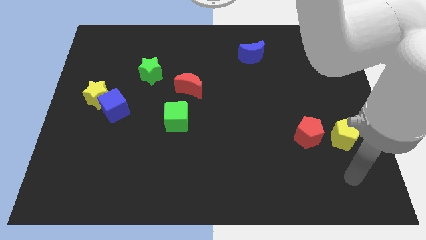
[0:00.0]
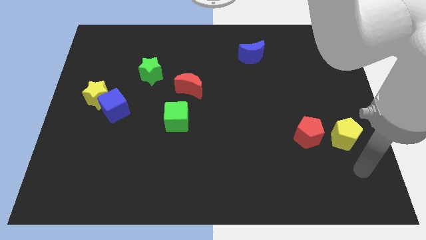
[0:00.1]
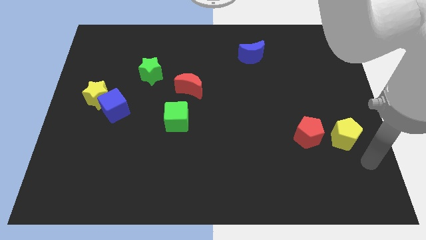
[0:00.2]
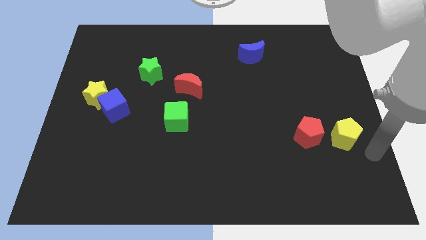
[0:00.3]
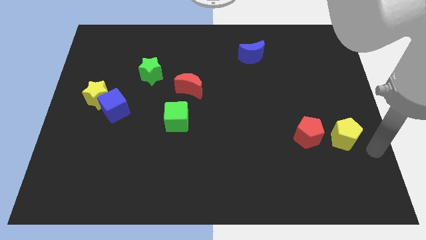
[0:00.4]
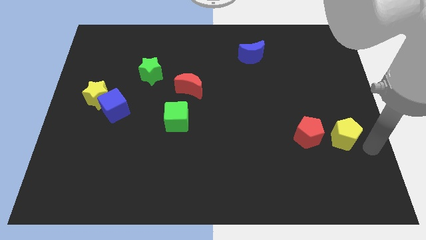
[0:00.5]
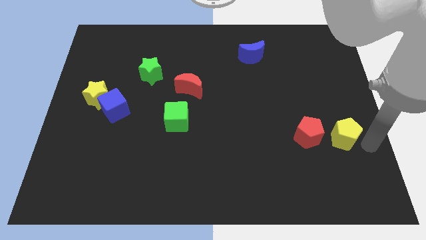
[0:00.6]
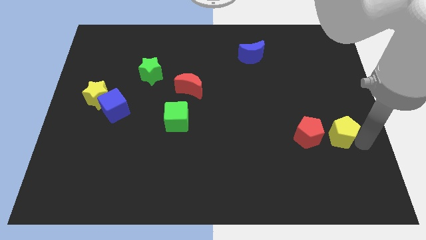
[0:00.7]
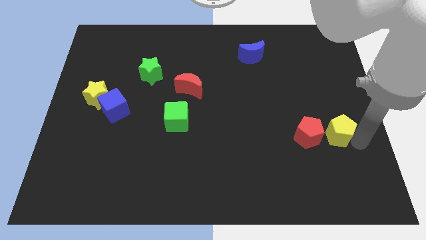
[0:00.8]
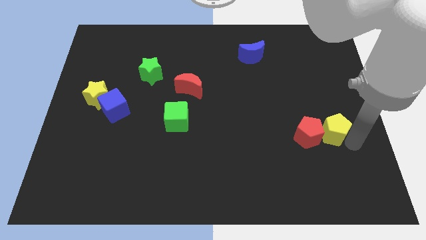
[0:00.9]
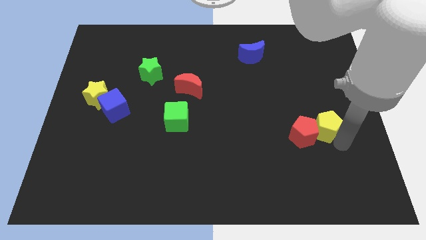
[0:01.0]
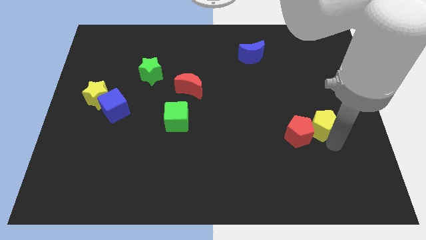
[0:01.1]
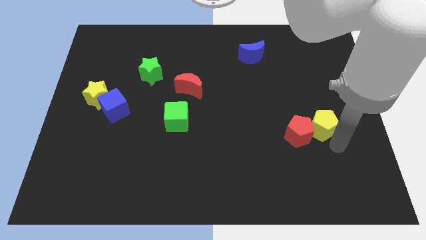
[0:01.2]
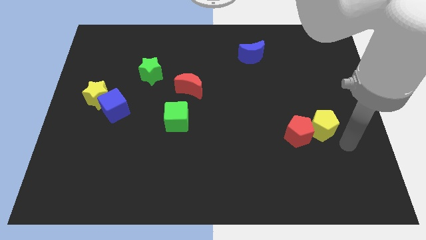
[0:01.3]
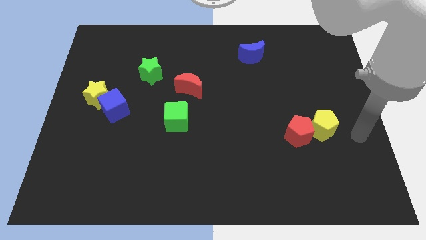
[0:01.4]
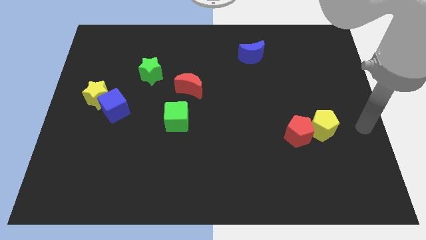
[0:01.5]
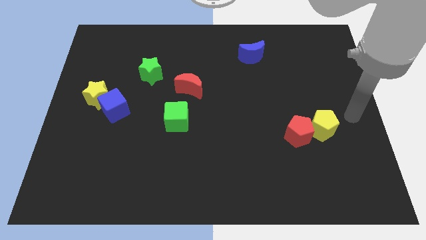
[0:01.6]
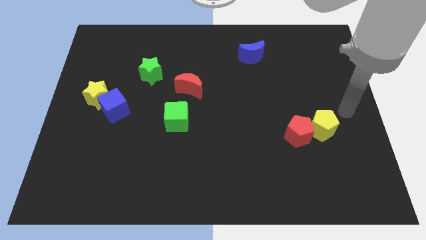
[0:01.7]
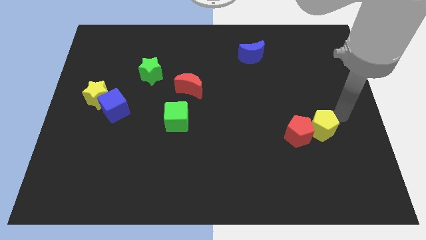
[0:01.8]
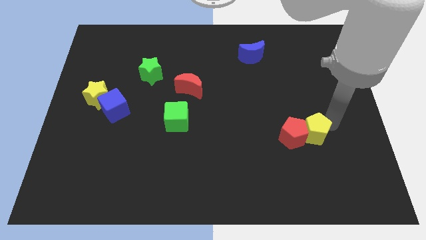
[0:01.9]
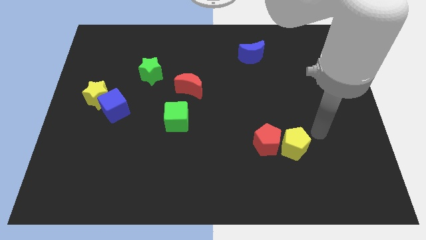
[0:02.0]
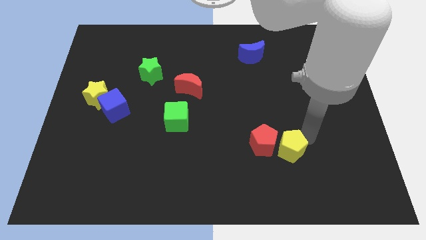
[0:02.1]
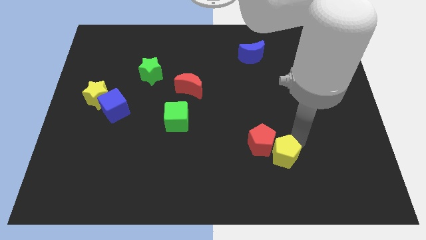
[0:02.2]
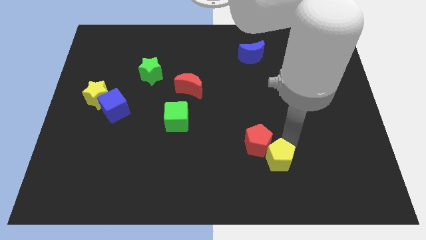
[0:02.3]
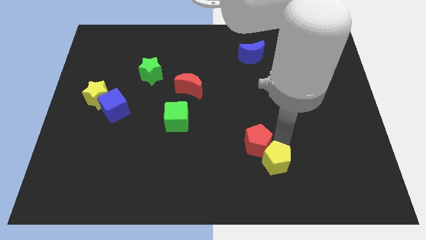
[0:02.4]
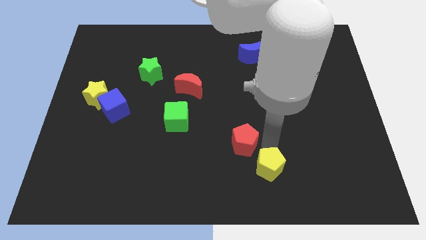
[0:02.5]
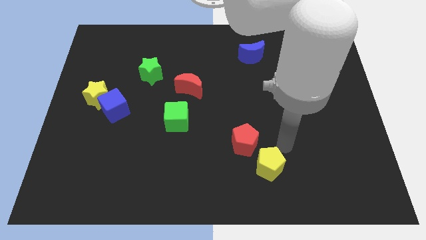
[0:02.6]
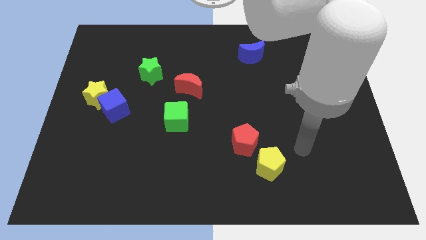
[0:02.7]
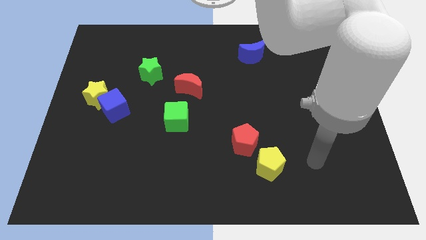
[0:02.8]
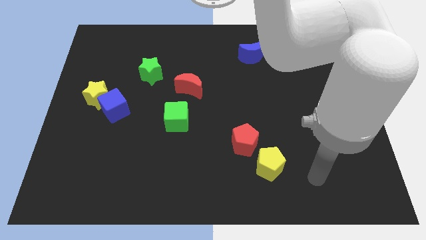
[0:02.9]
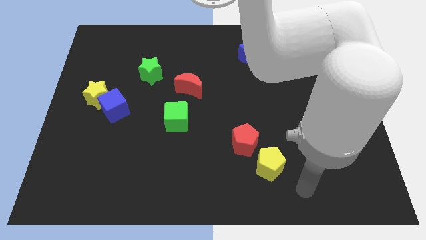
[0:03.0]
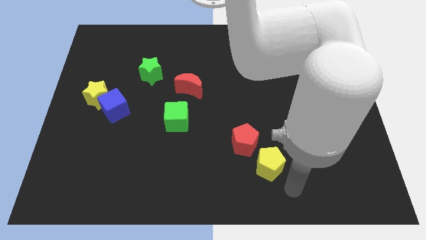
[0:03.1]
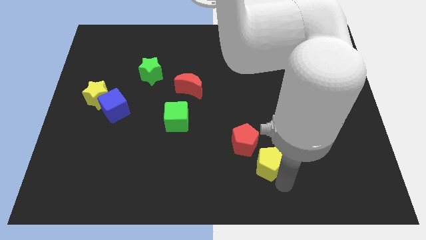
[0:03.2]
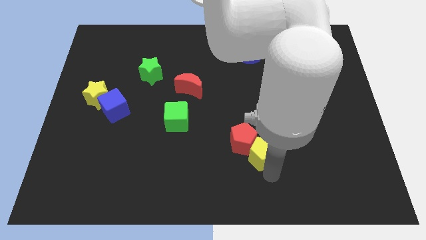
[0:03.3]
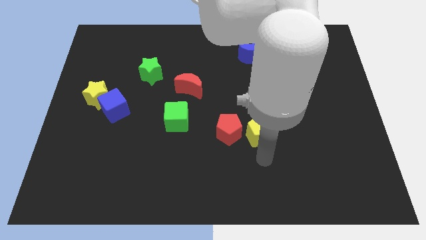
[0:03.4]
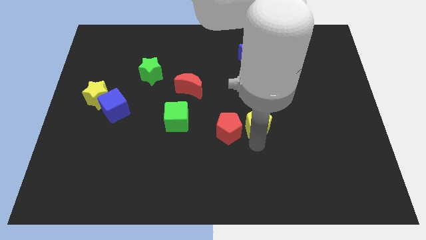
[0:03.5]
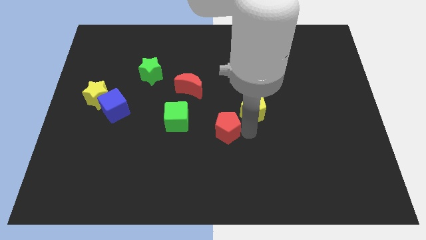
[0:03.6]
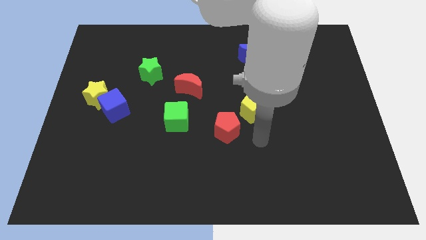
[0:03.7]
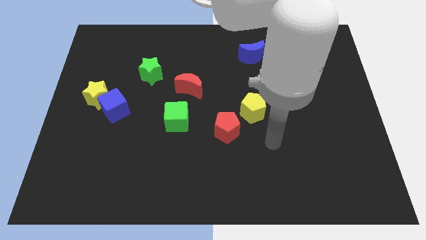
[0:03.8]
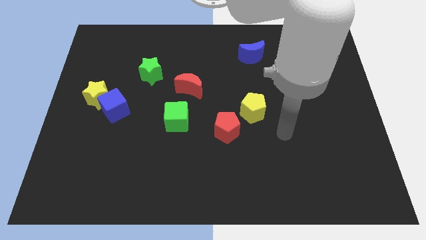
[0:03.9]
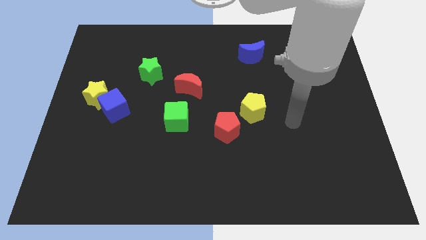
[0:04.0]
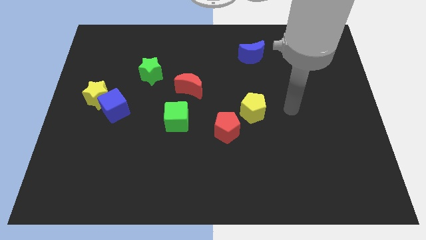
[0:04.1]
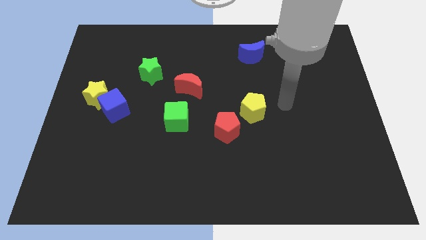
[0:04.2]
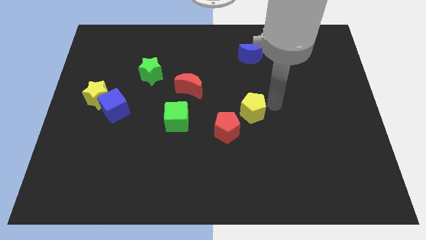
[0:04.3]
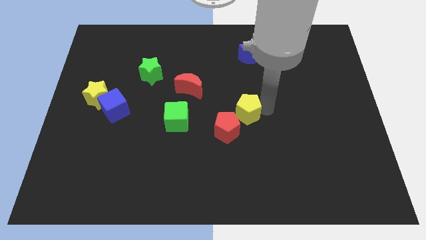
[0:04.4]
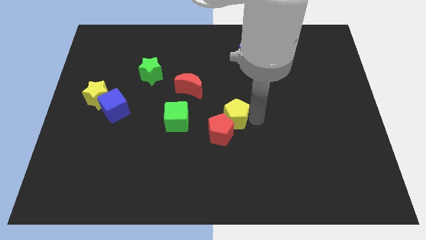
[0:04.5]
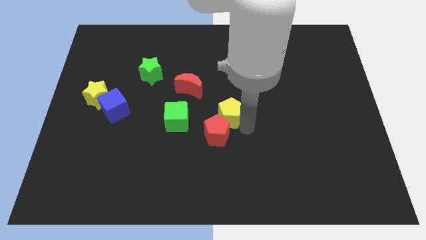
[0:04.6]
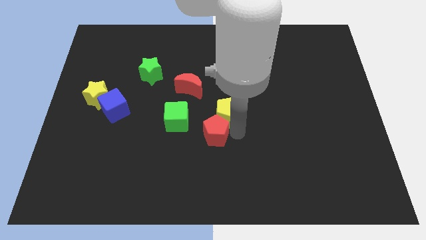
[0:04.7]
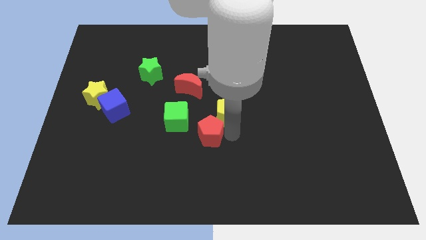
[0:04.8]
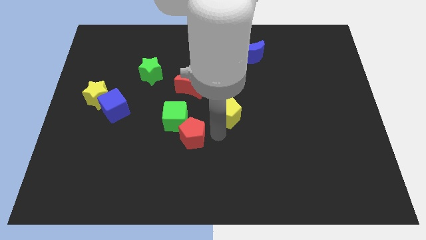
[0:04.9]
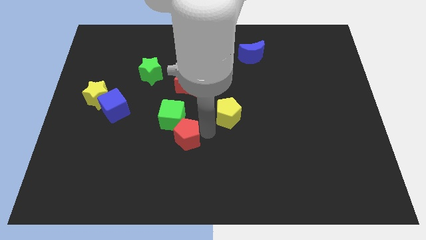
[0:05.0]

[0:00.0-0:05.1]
place yellow pentagon to the center of the board

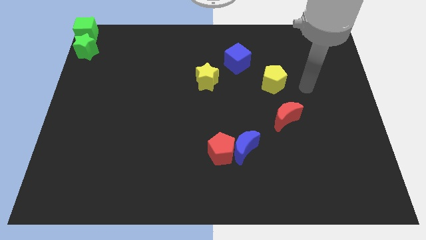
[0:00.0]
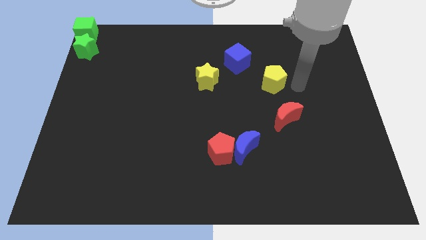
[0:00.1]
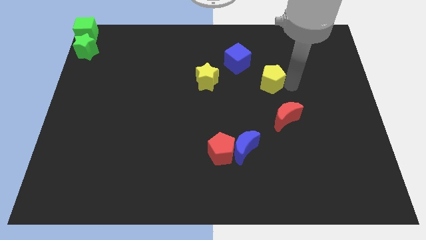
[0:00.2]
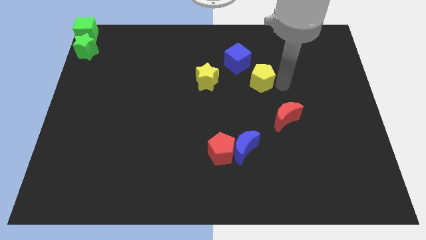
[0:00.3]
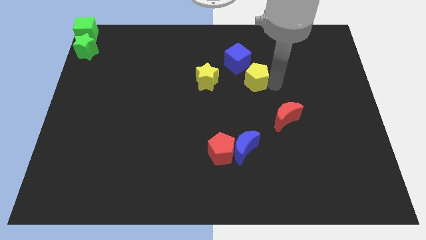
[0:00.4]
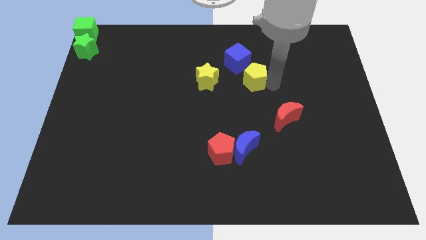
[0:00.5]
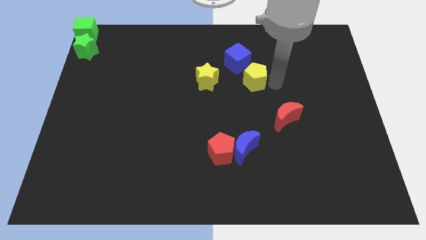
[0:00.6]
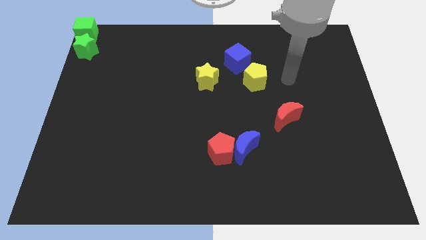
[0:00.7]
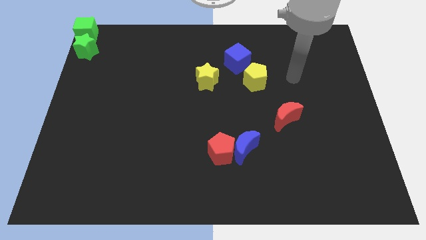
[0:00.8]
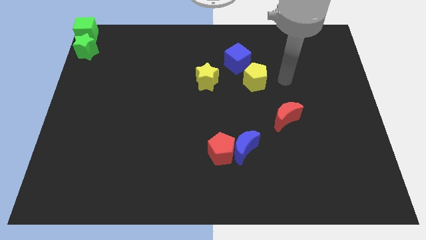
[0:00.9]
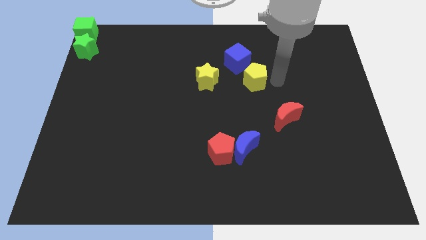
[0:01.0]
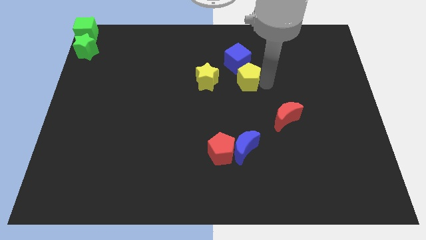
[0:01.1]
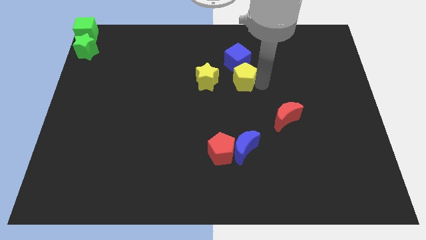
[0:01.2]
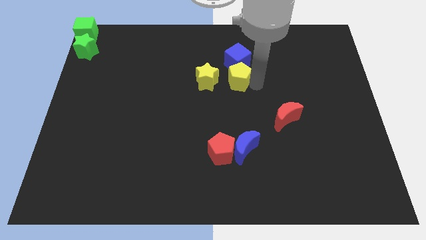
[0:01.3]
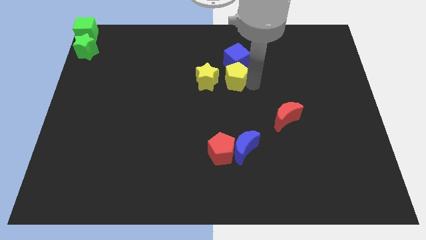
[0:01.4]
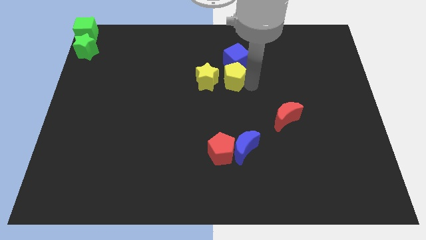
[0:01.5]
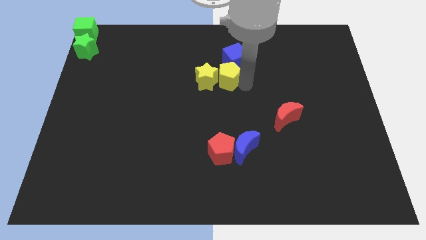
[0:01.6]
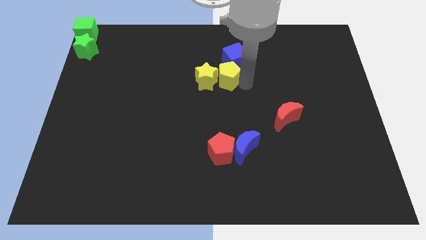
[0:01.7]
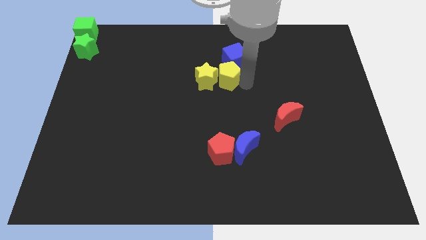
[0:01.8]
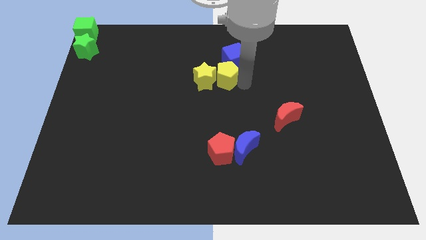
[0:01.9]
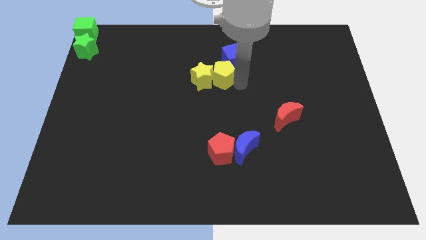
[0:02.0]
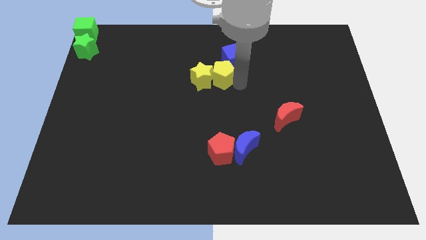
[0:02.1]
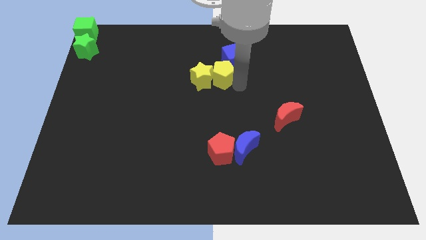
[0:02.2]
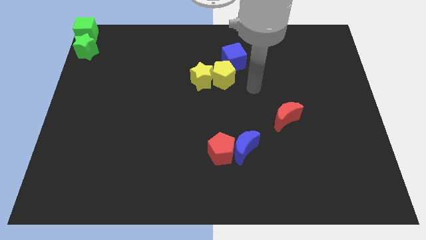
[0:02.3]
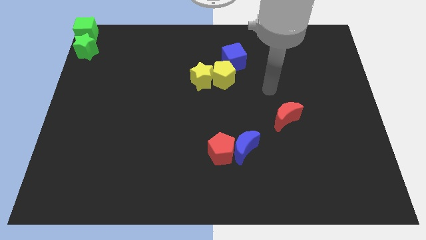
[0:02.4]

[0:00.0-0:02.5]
push the yellow pentagon into yellow star

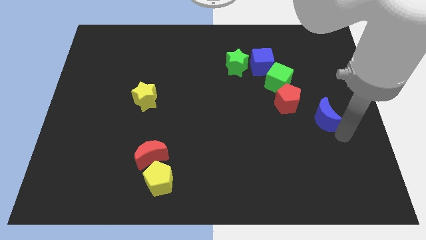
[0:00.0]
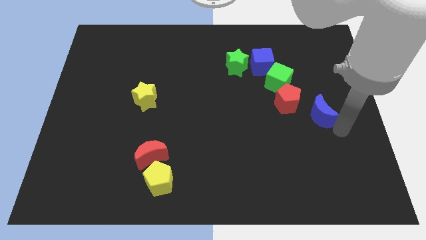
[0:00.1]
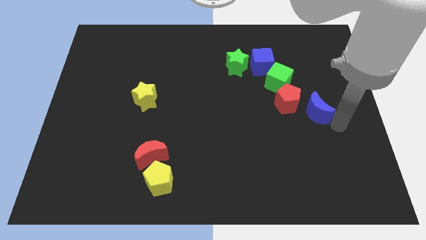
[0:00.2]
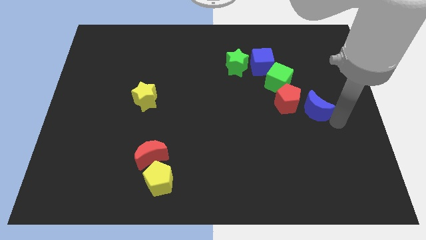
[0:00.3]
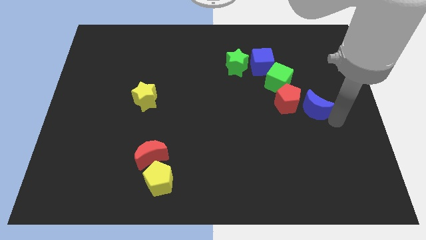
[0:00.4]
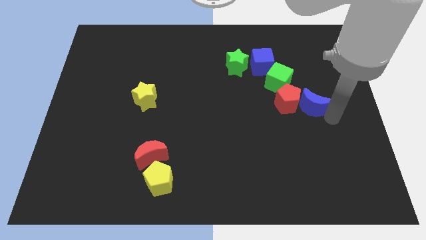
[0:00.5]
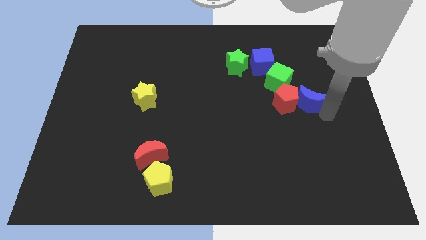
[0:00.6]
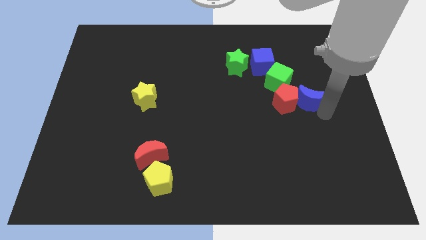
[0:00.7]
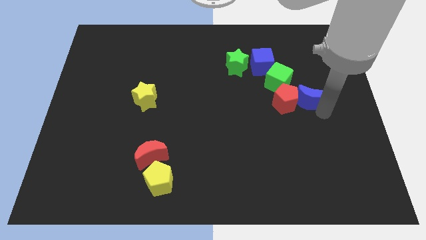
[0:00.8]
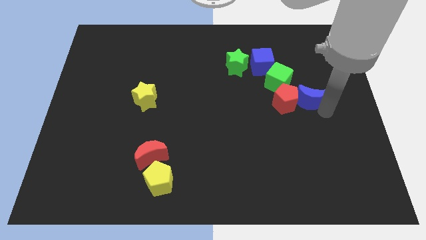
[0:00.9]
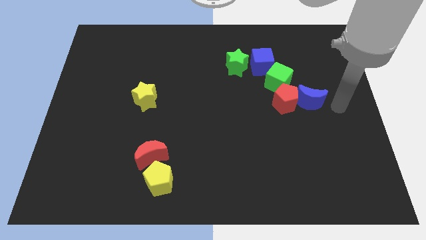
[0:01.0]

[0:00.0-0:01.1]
push the blue crescent to the right of the red pentagon

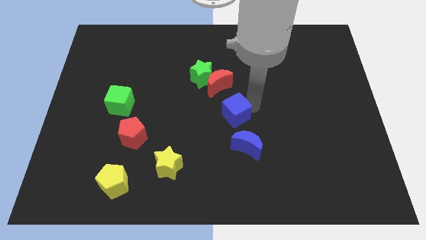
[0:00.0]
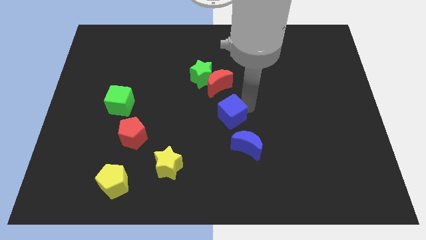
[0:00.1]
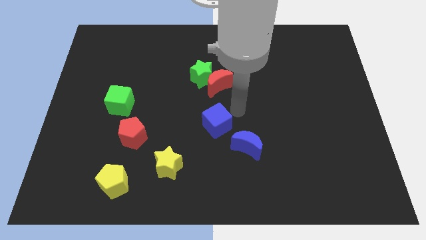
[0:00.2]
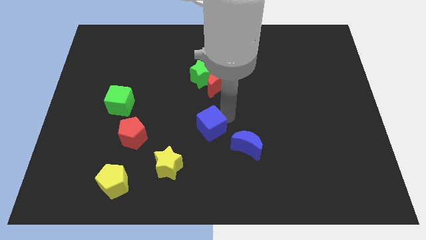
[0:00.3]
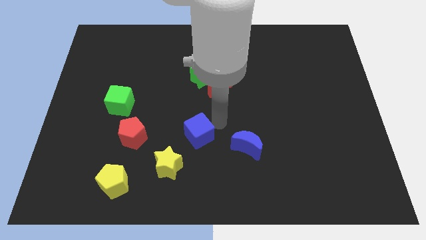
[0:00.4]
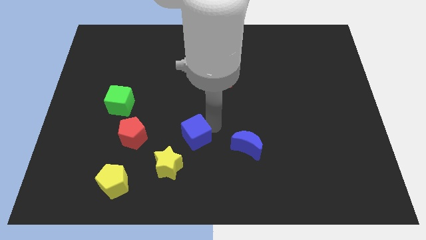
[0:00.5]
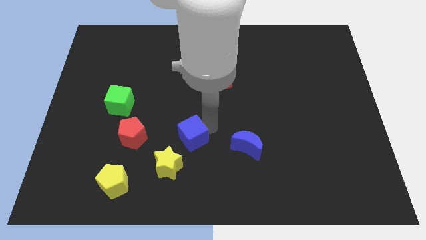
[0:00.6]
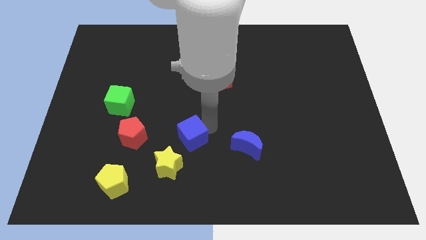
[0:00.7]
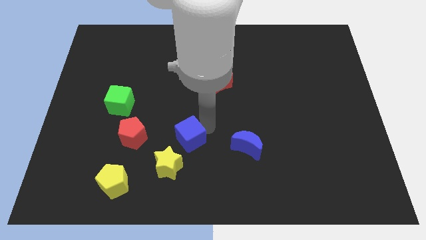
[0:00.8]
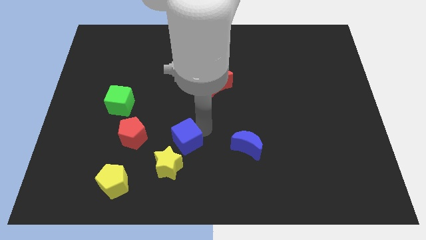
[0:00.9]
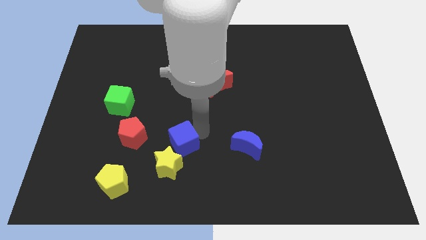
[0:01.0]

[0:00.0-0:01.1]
place the blue to the left of the blue crescent
